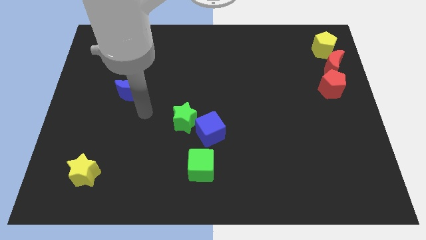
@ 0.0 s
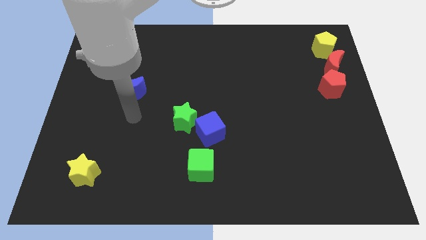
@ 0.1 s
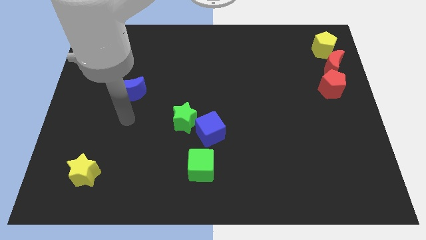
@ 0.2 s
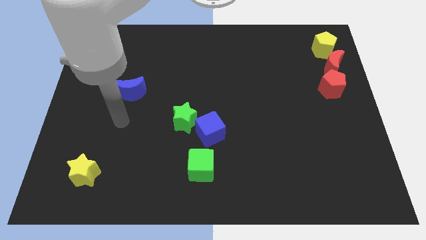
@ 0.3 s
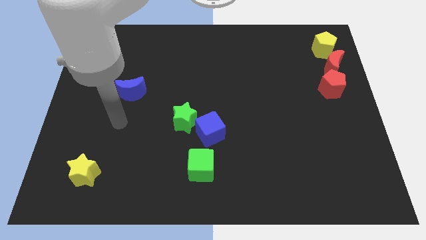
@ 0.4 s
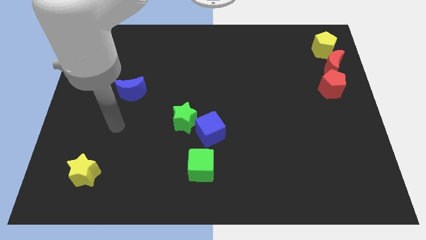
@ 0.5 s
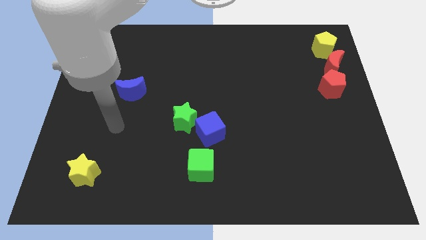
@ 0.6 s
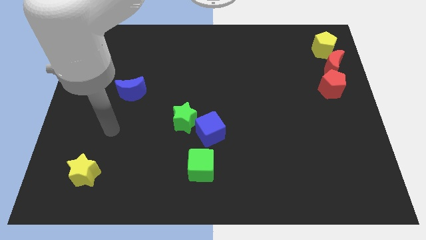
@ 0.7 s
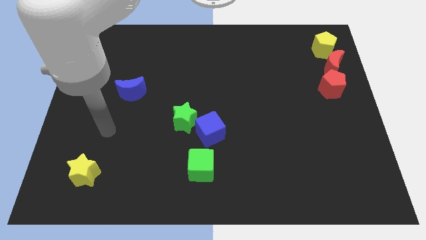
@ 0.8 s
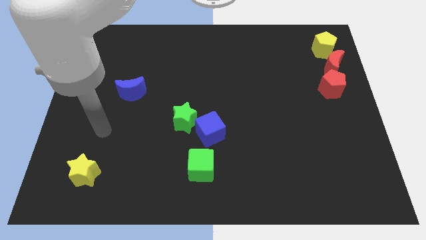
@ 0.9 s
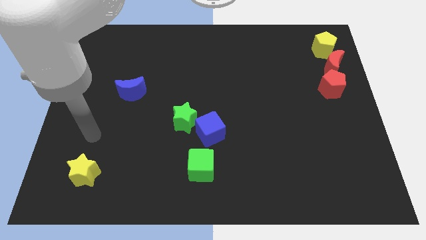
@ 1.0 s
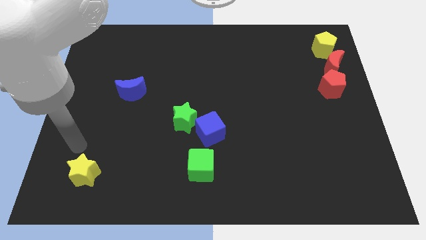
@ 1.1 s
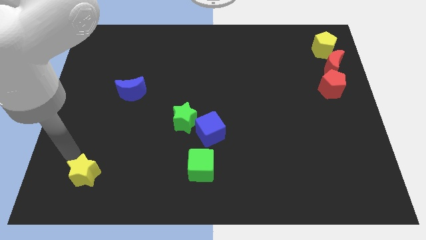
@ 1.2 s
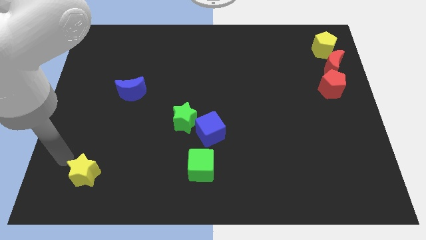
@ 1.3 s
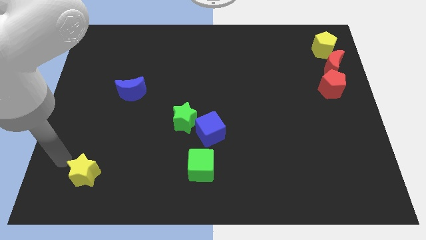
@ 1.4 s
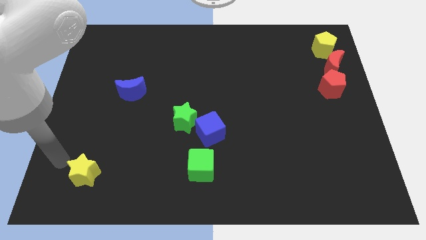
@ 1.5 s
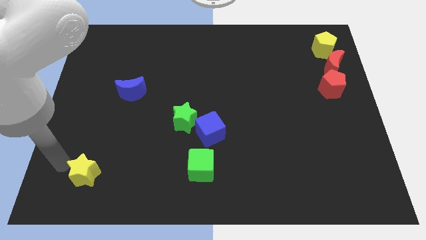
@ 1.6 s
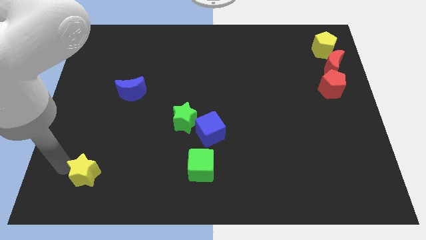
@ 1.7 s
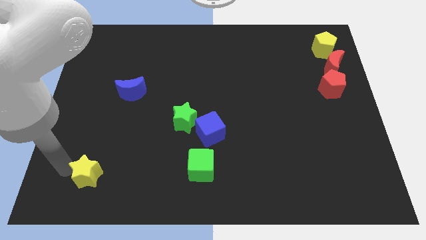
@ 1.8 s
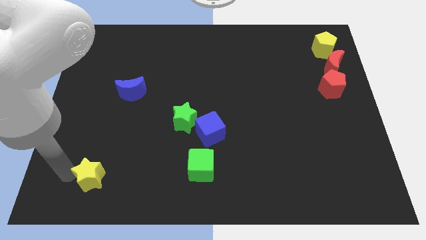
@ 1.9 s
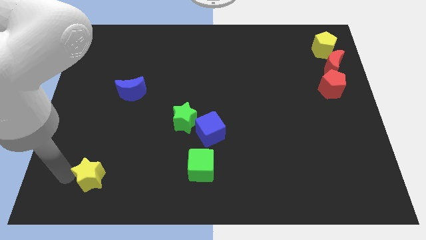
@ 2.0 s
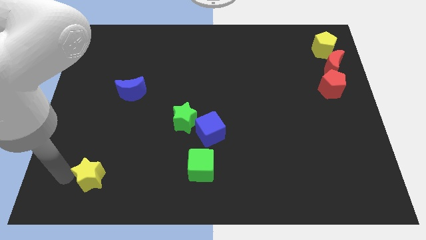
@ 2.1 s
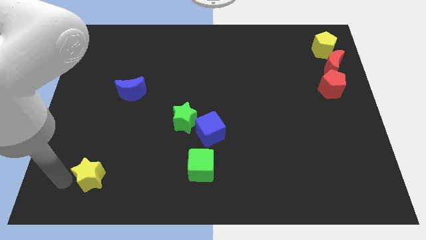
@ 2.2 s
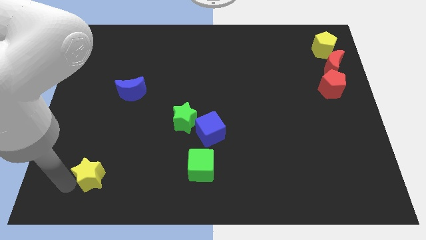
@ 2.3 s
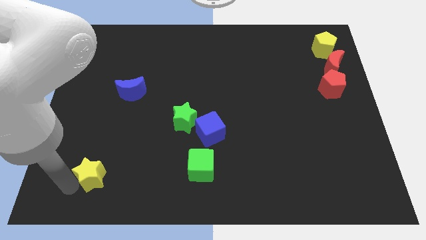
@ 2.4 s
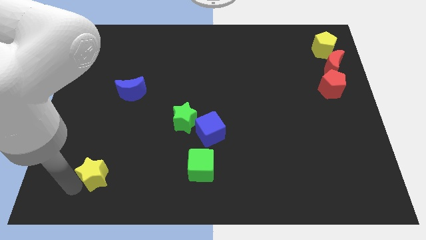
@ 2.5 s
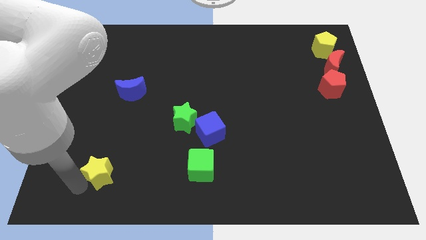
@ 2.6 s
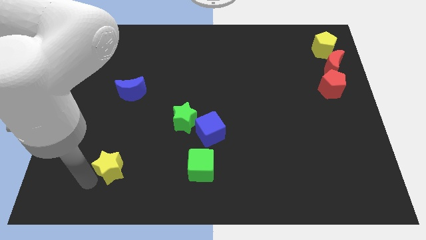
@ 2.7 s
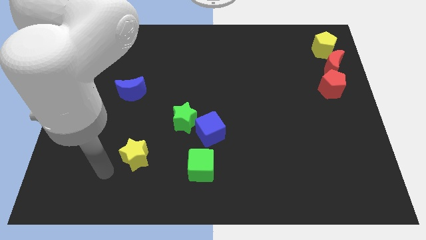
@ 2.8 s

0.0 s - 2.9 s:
put yellow star parallel to green cube

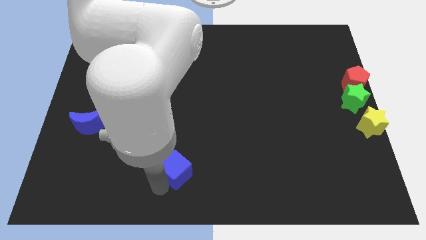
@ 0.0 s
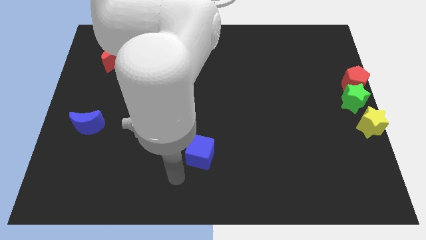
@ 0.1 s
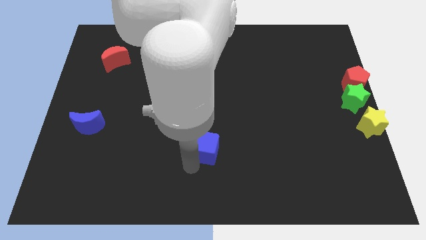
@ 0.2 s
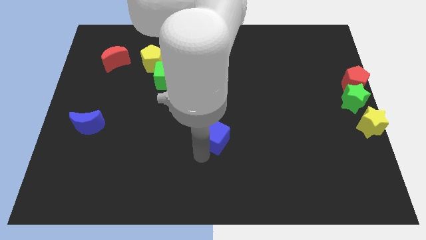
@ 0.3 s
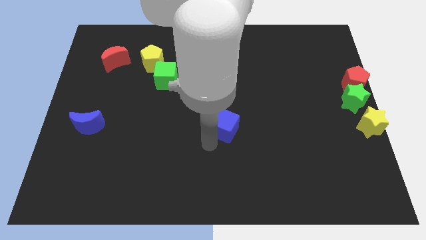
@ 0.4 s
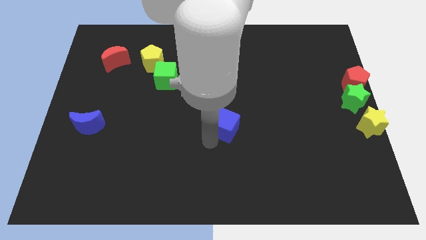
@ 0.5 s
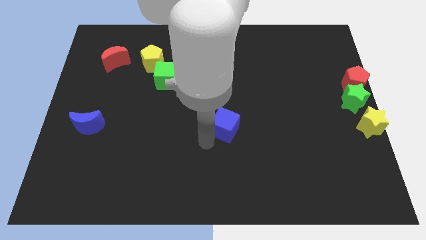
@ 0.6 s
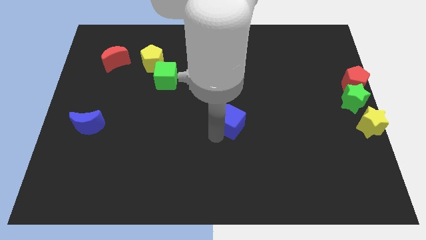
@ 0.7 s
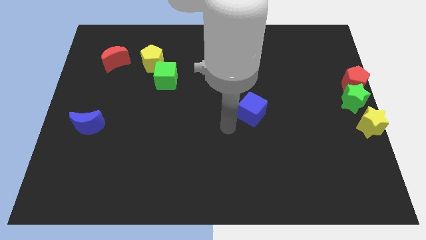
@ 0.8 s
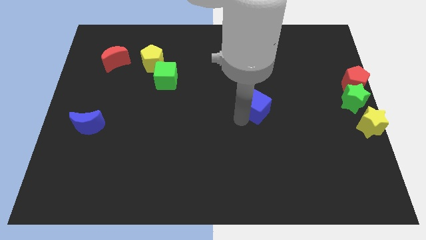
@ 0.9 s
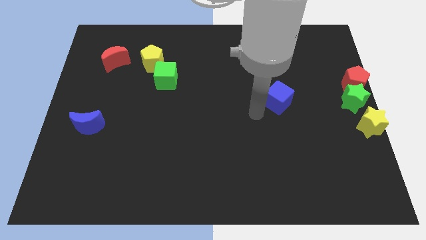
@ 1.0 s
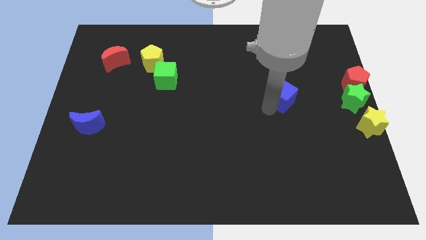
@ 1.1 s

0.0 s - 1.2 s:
place the blue cube horizontally to the left side of the green star

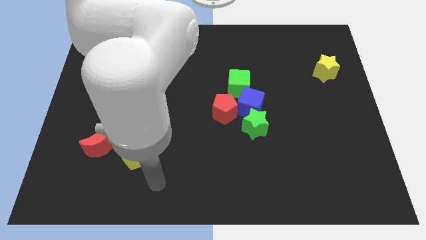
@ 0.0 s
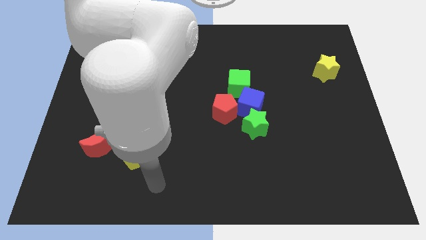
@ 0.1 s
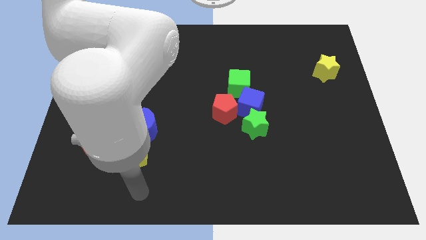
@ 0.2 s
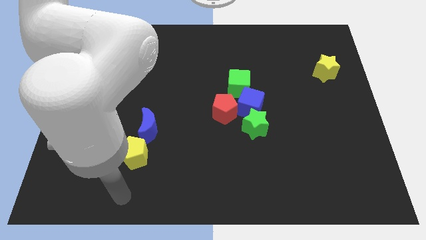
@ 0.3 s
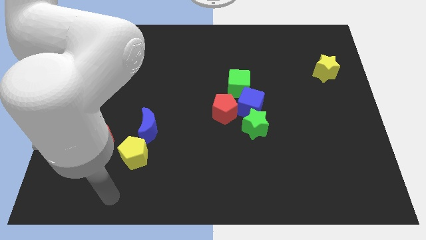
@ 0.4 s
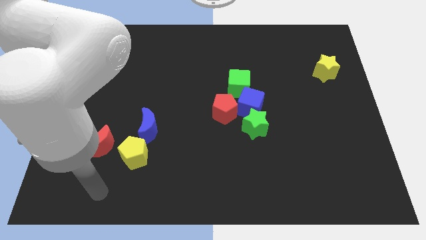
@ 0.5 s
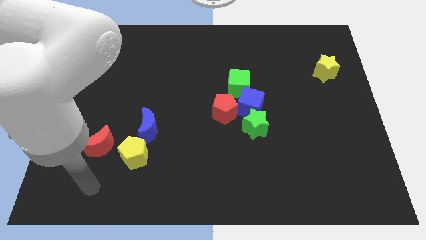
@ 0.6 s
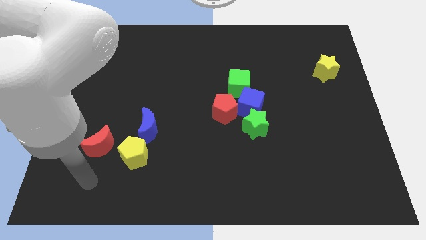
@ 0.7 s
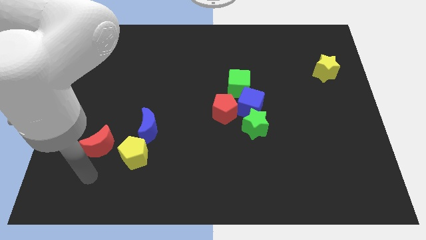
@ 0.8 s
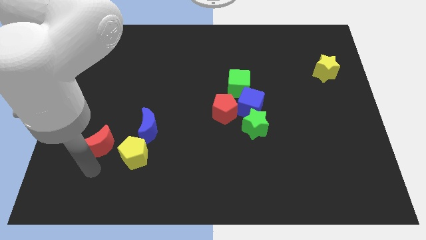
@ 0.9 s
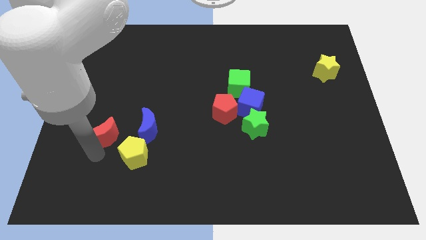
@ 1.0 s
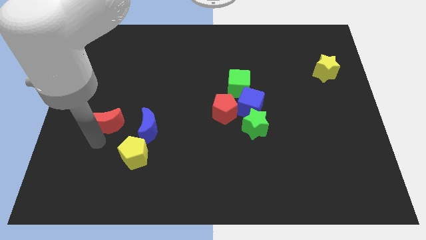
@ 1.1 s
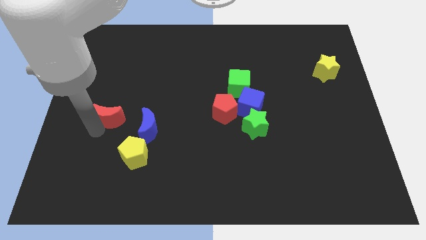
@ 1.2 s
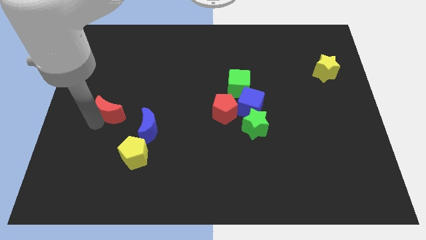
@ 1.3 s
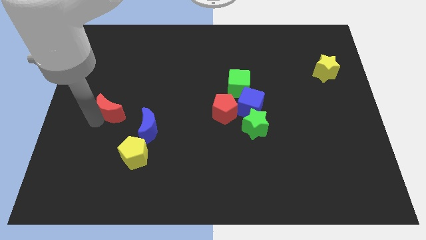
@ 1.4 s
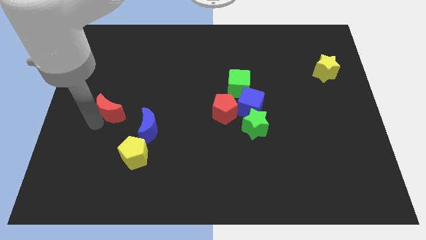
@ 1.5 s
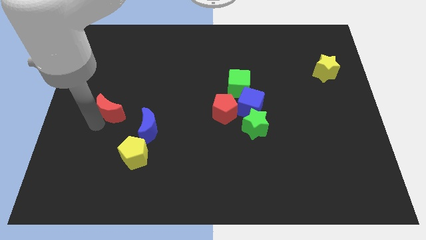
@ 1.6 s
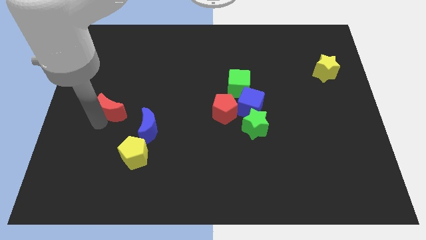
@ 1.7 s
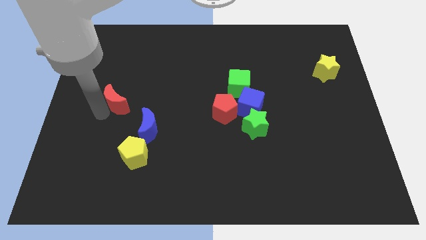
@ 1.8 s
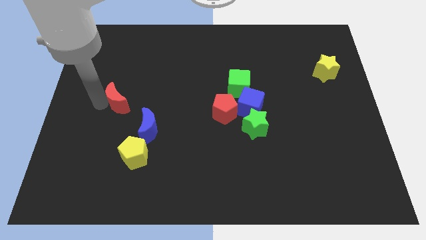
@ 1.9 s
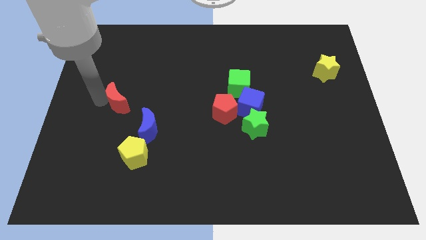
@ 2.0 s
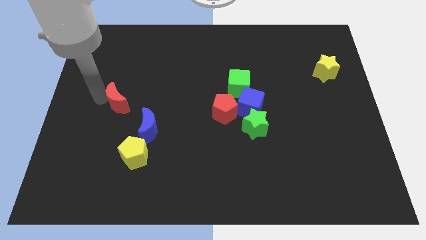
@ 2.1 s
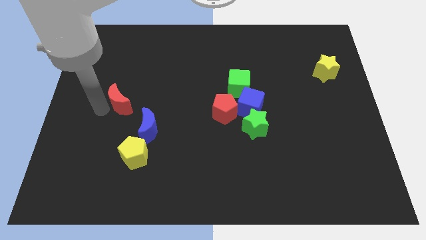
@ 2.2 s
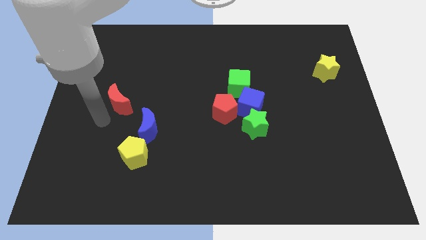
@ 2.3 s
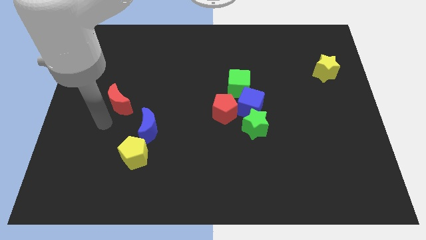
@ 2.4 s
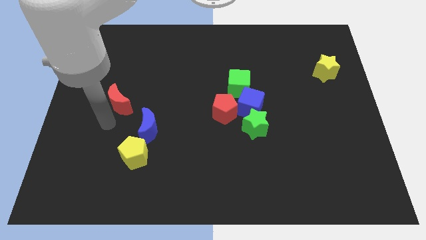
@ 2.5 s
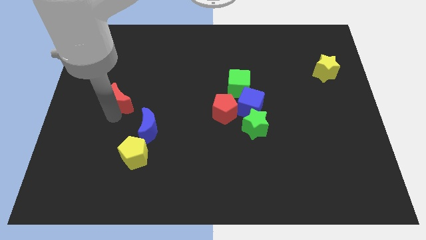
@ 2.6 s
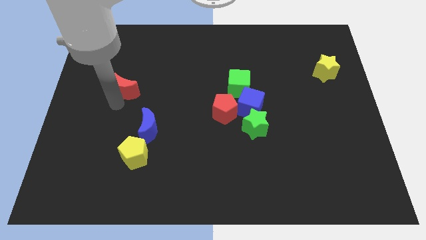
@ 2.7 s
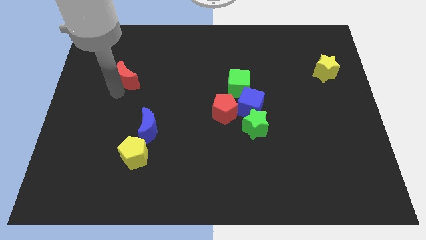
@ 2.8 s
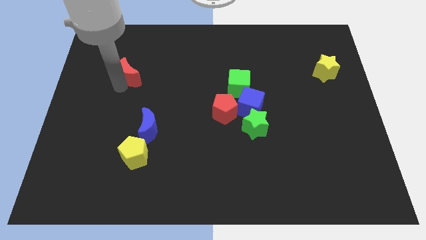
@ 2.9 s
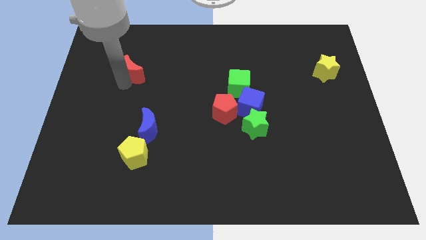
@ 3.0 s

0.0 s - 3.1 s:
slide the red crescent diagonally top left to the blue moon

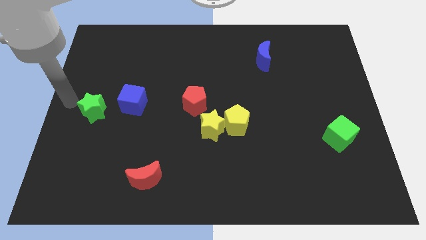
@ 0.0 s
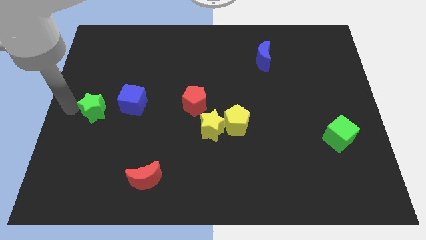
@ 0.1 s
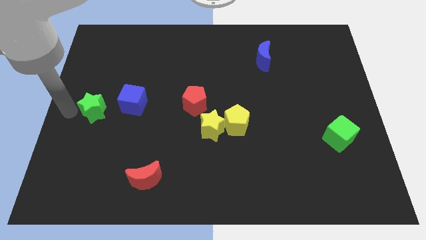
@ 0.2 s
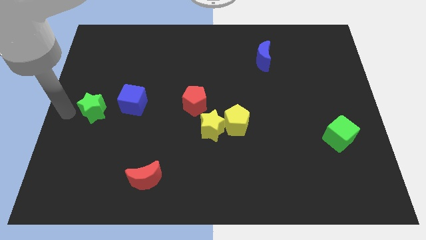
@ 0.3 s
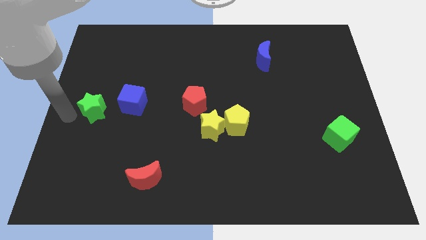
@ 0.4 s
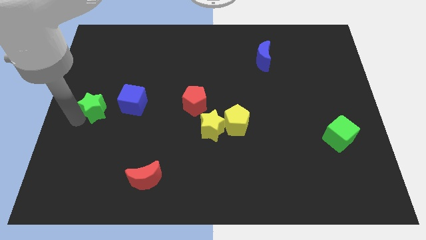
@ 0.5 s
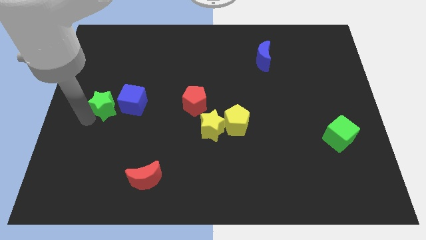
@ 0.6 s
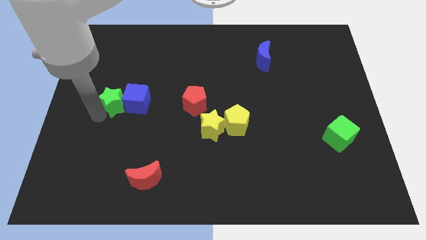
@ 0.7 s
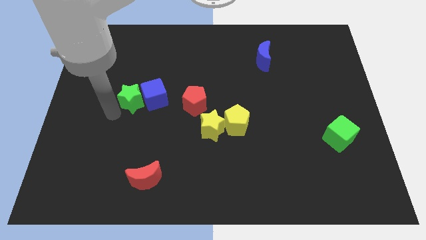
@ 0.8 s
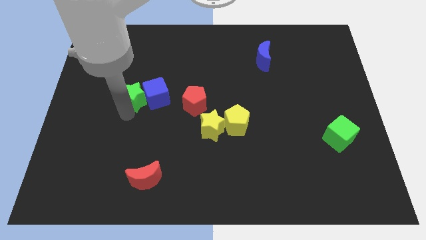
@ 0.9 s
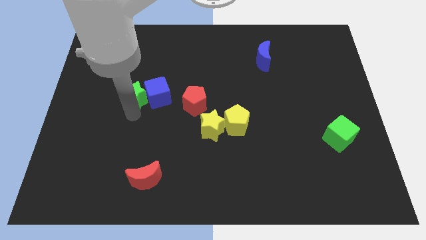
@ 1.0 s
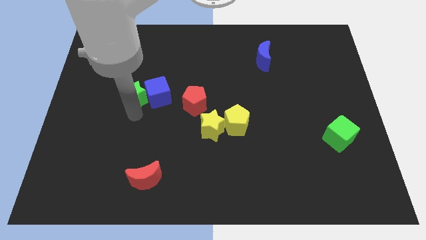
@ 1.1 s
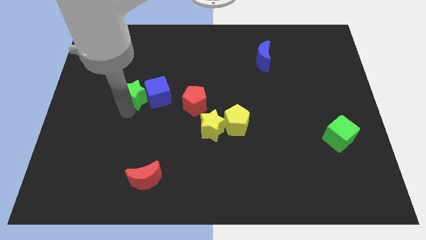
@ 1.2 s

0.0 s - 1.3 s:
push the green star into the blue cube

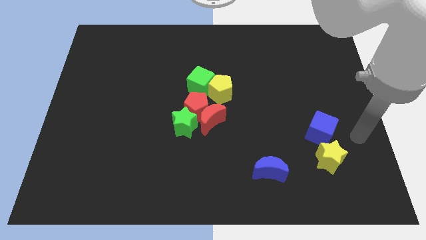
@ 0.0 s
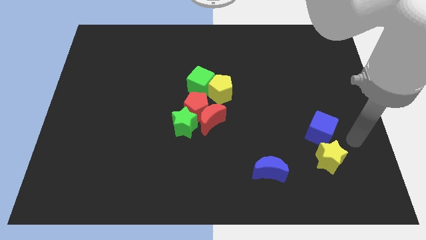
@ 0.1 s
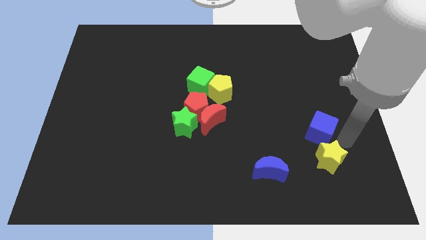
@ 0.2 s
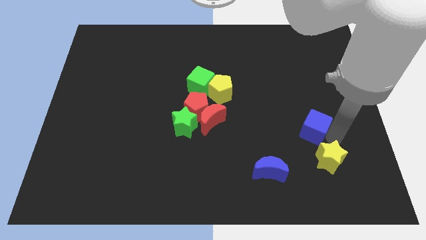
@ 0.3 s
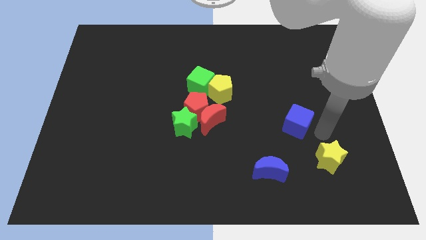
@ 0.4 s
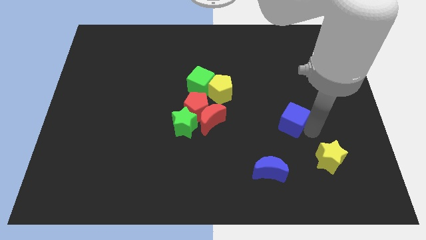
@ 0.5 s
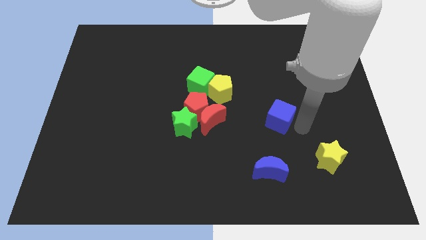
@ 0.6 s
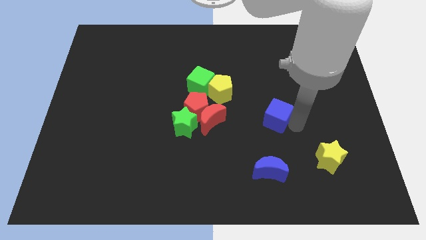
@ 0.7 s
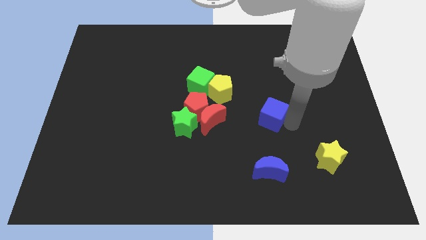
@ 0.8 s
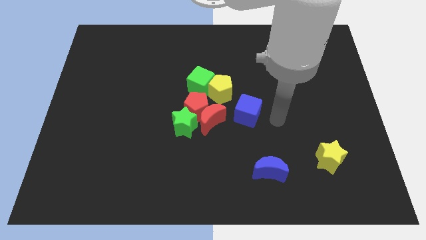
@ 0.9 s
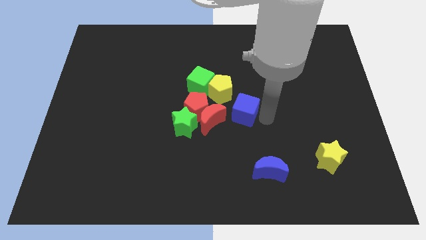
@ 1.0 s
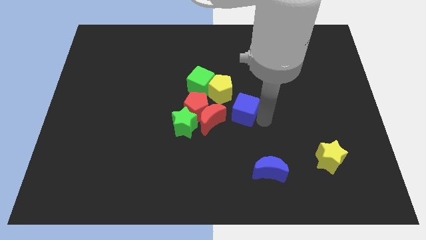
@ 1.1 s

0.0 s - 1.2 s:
move the blue cube towards the center of the board
